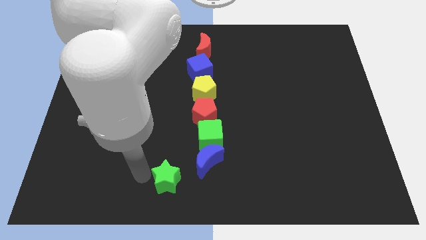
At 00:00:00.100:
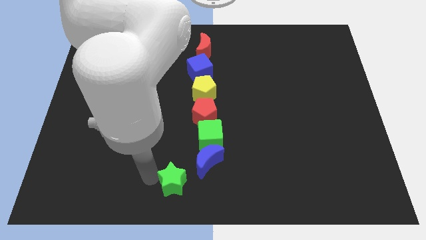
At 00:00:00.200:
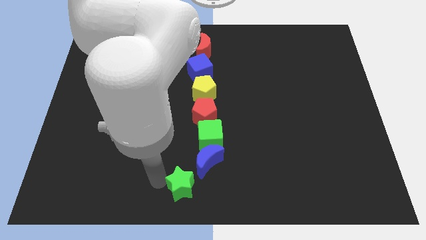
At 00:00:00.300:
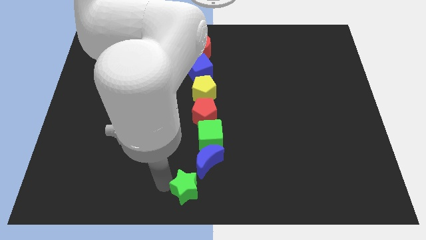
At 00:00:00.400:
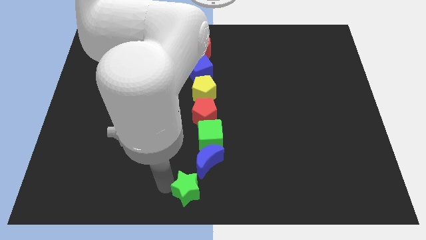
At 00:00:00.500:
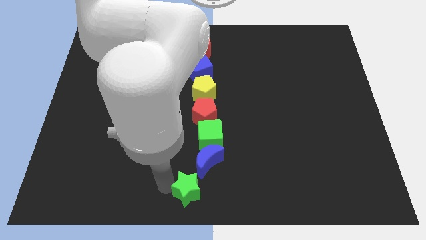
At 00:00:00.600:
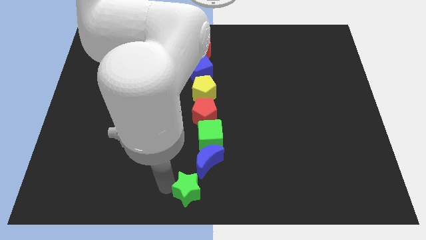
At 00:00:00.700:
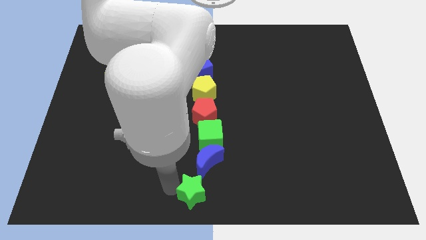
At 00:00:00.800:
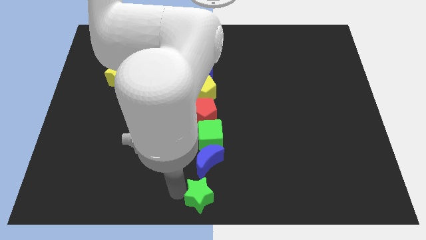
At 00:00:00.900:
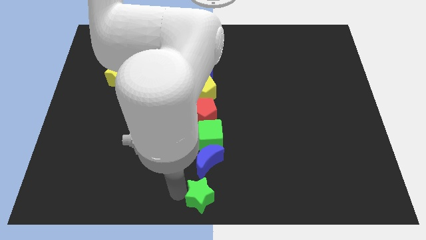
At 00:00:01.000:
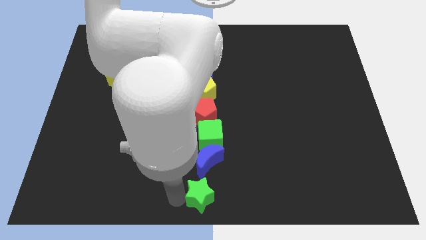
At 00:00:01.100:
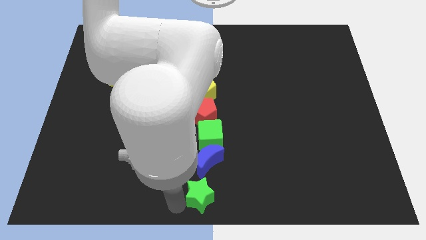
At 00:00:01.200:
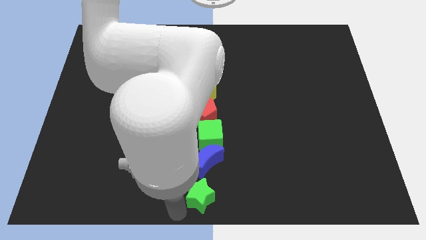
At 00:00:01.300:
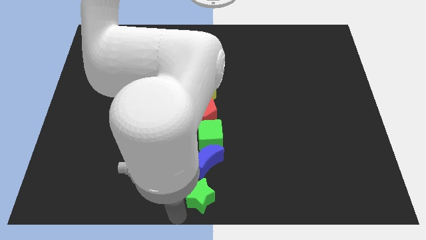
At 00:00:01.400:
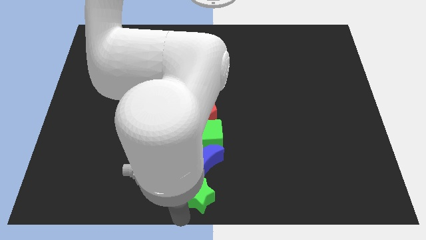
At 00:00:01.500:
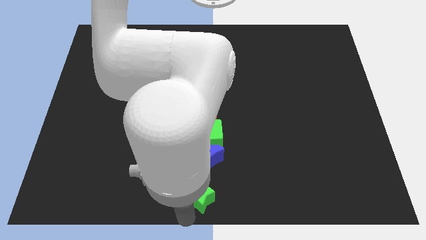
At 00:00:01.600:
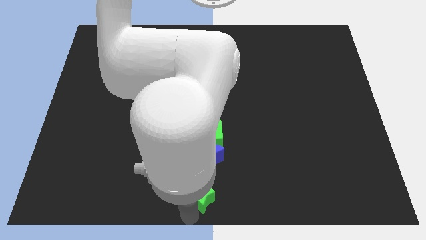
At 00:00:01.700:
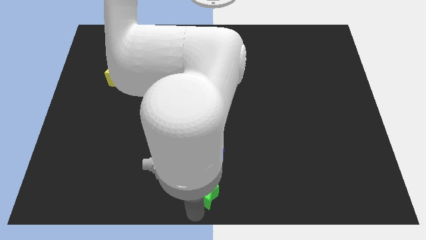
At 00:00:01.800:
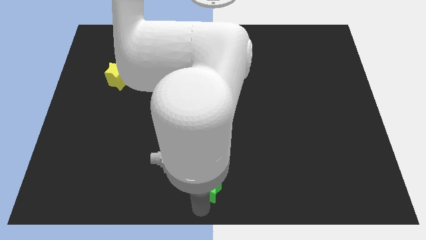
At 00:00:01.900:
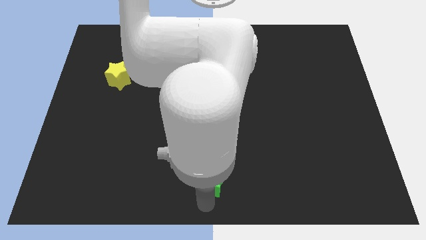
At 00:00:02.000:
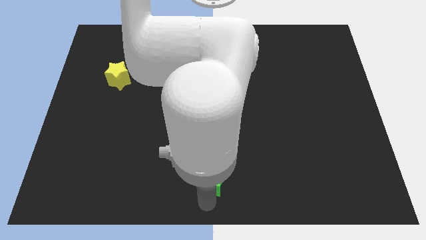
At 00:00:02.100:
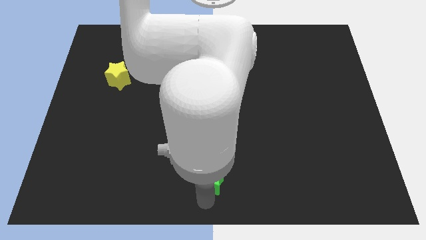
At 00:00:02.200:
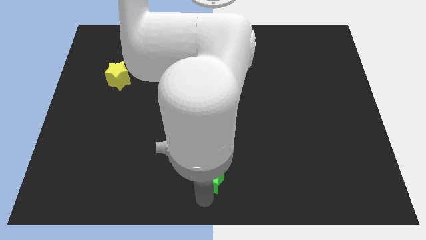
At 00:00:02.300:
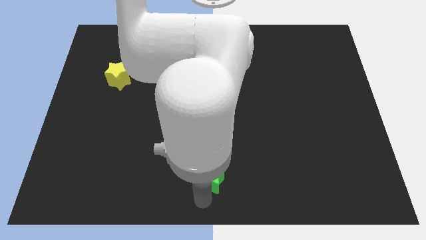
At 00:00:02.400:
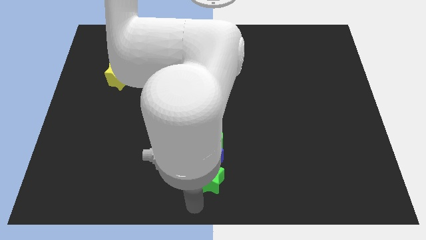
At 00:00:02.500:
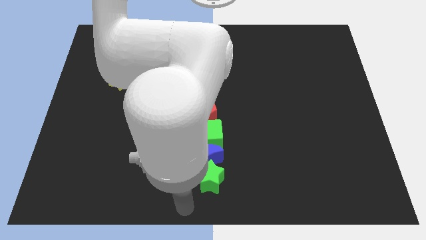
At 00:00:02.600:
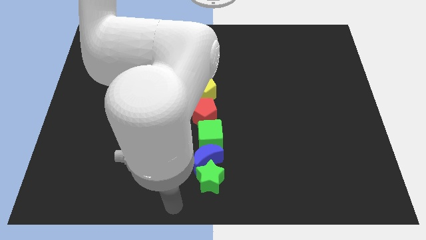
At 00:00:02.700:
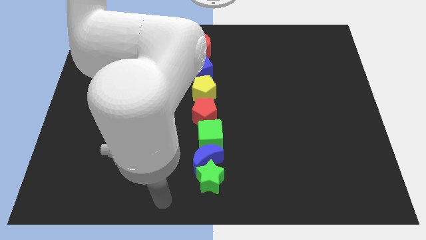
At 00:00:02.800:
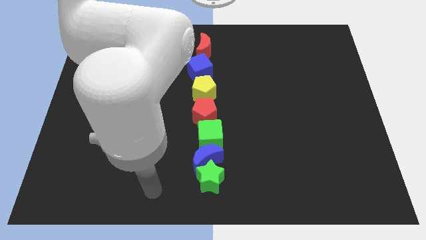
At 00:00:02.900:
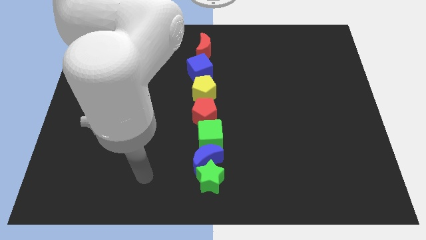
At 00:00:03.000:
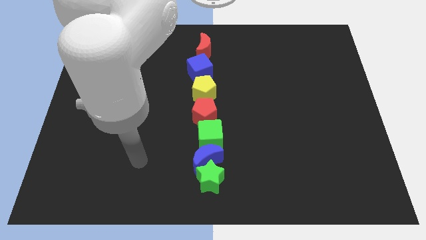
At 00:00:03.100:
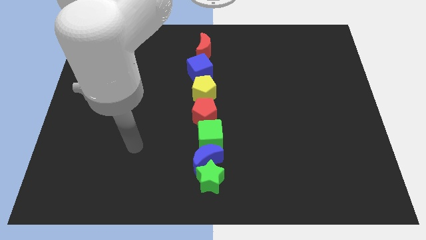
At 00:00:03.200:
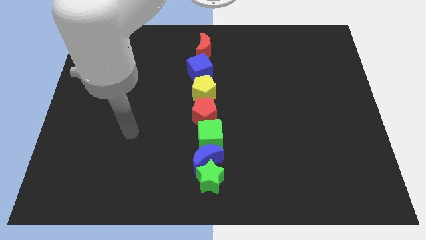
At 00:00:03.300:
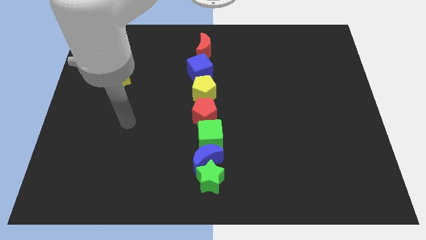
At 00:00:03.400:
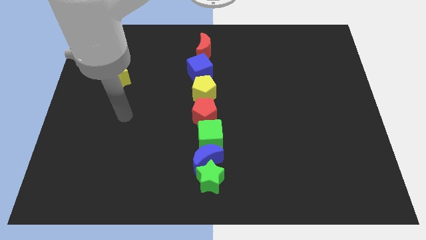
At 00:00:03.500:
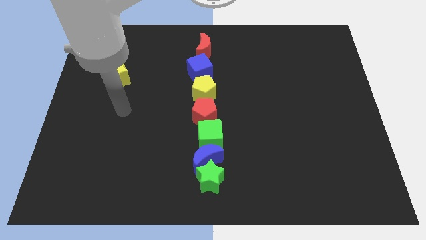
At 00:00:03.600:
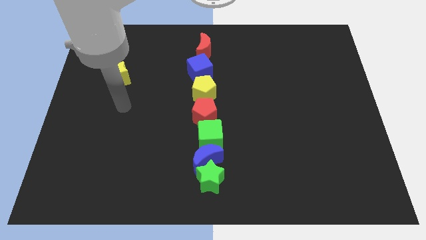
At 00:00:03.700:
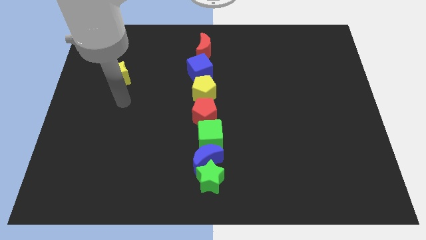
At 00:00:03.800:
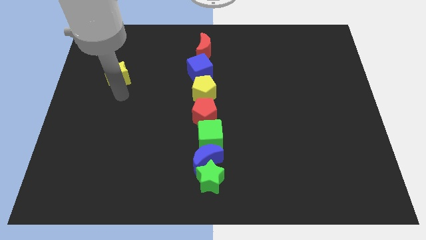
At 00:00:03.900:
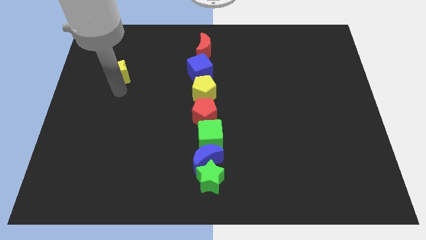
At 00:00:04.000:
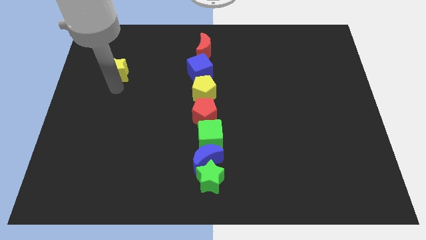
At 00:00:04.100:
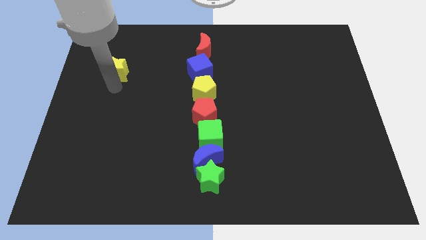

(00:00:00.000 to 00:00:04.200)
move the arm closer to the yellow star

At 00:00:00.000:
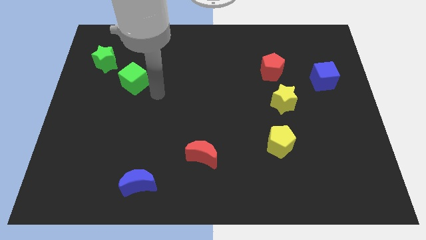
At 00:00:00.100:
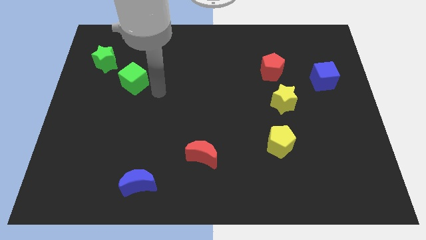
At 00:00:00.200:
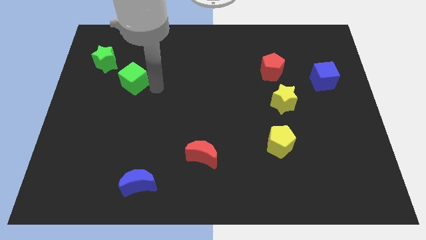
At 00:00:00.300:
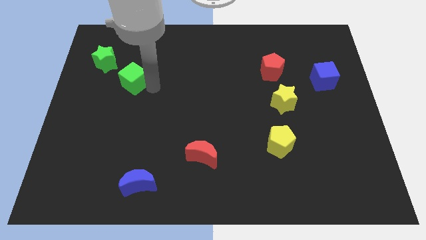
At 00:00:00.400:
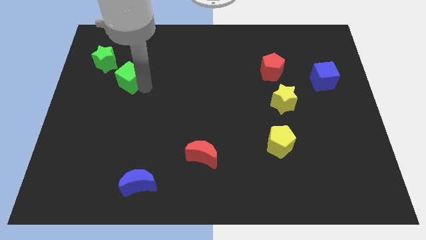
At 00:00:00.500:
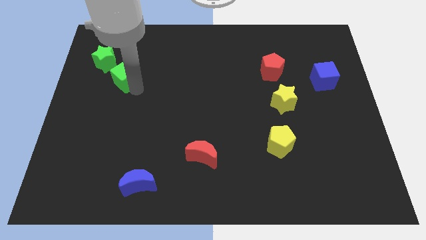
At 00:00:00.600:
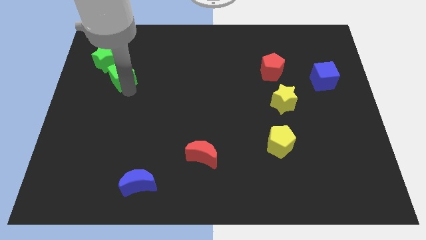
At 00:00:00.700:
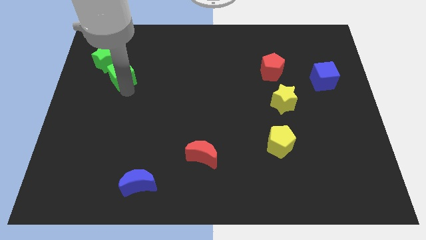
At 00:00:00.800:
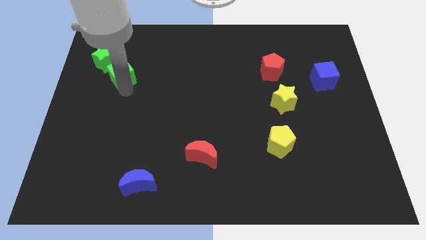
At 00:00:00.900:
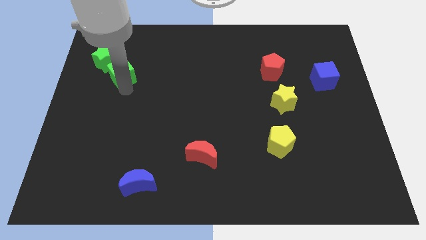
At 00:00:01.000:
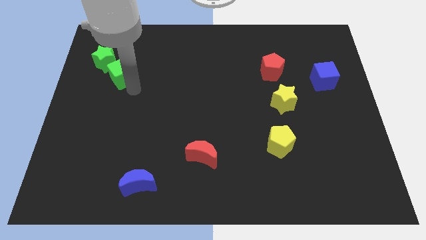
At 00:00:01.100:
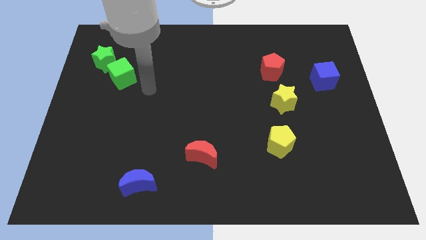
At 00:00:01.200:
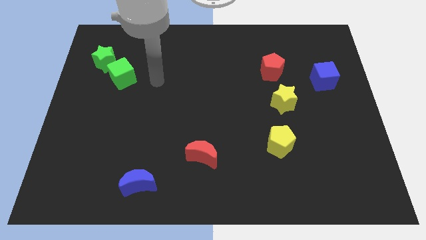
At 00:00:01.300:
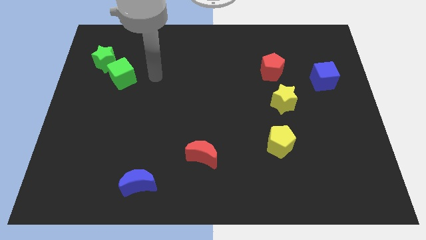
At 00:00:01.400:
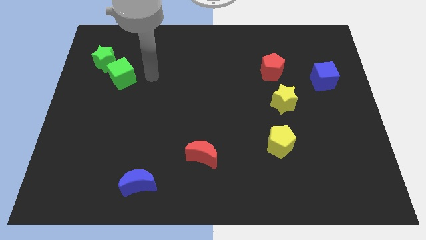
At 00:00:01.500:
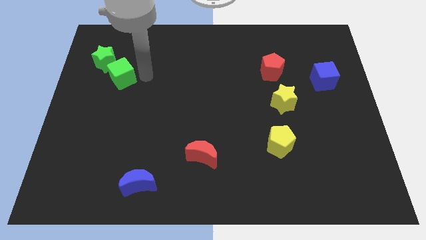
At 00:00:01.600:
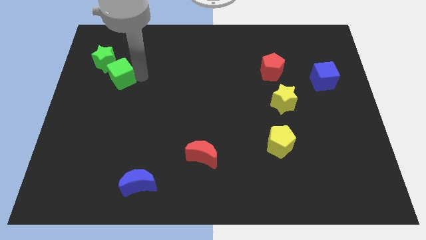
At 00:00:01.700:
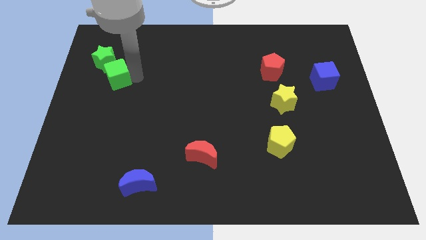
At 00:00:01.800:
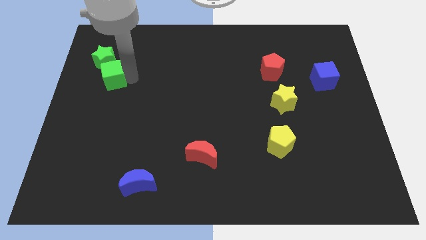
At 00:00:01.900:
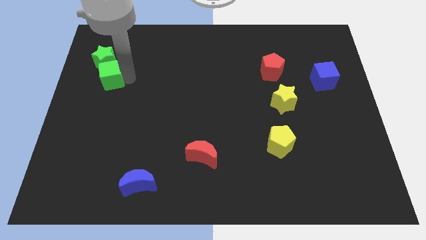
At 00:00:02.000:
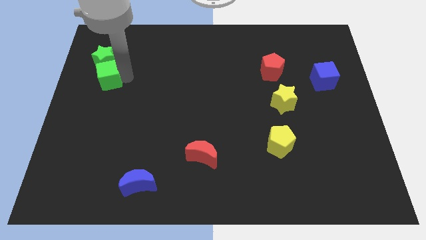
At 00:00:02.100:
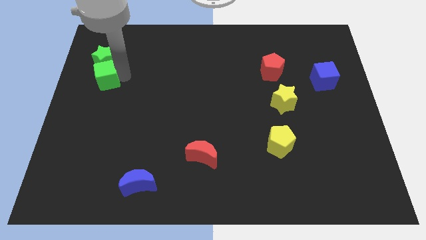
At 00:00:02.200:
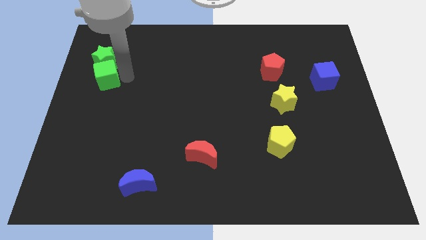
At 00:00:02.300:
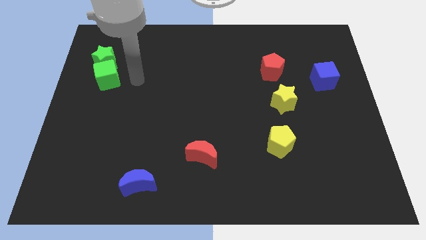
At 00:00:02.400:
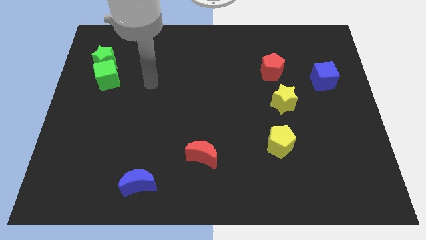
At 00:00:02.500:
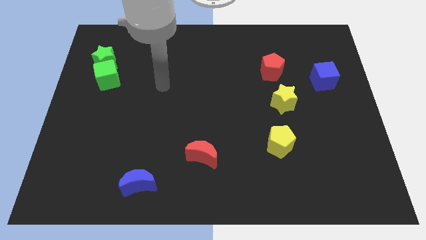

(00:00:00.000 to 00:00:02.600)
move the green cube to the bottom of the green star

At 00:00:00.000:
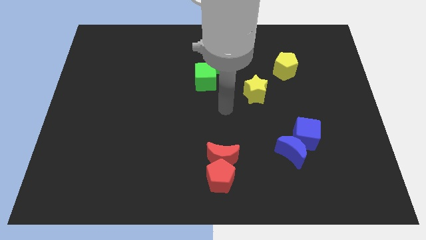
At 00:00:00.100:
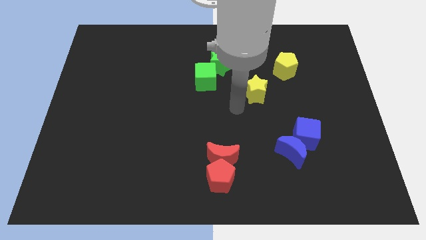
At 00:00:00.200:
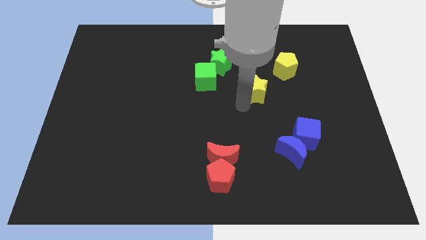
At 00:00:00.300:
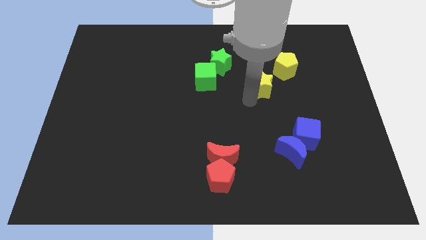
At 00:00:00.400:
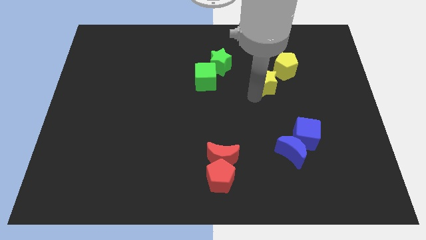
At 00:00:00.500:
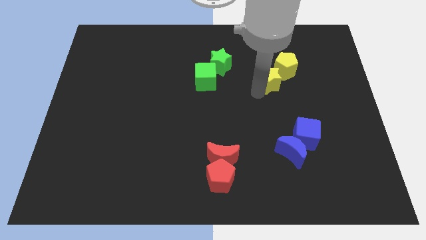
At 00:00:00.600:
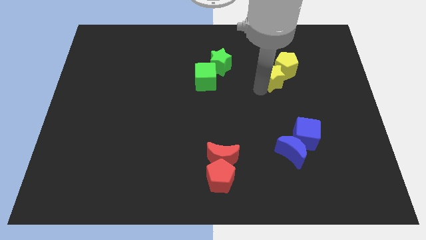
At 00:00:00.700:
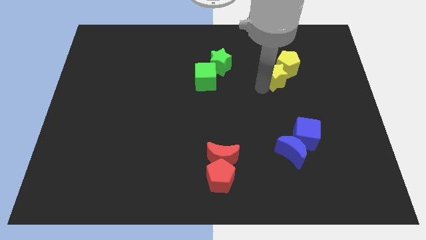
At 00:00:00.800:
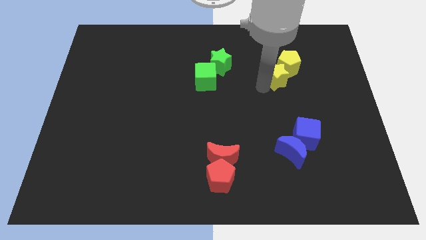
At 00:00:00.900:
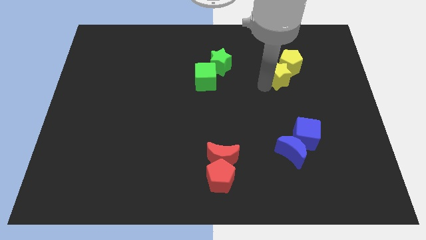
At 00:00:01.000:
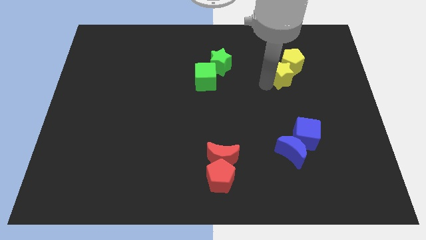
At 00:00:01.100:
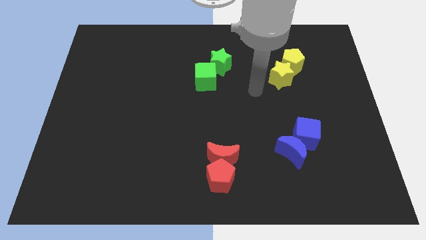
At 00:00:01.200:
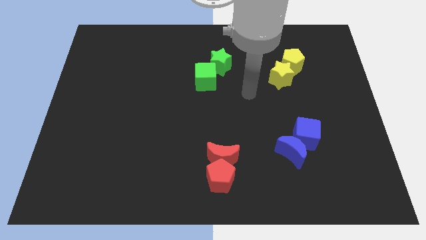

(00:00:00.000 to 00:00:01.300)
push the yellow star into the yellow pentagon

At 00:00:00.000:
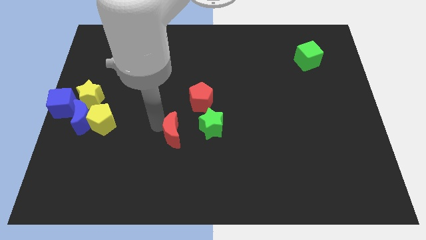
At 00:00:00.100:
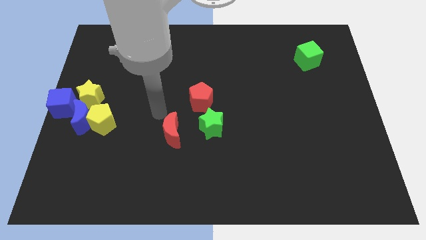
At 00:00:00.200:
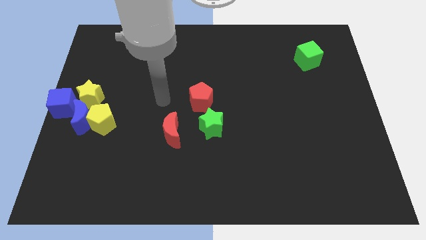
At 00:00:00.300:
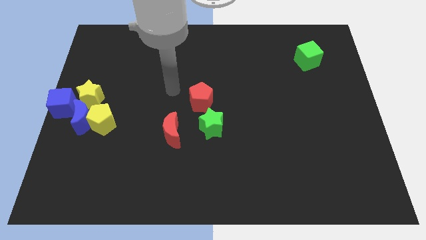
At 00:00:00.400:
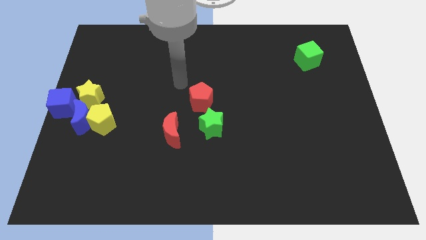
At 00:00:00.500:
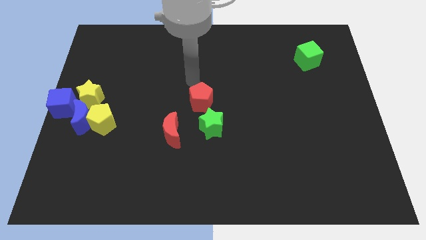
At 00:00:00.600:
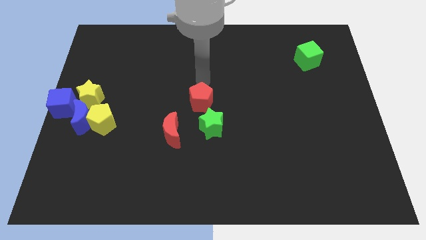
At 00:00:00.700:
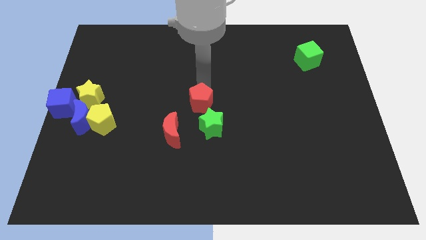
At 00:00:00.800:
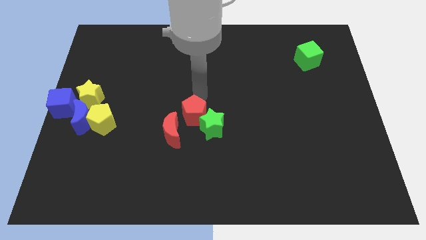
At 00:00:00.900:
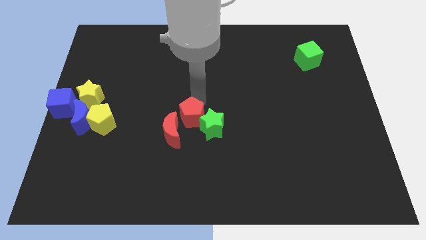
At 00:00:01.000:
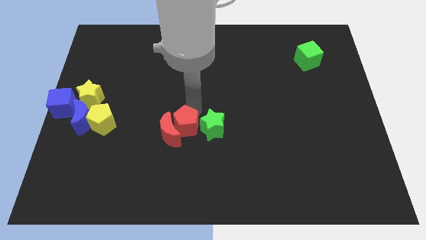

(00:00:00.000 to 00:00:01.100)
place red pentagon in between red moon and green star
